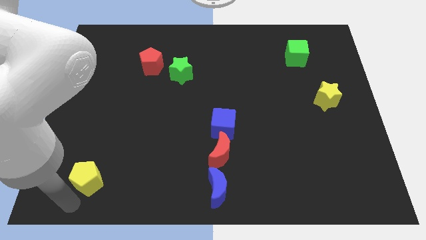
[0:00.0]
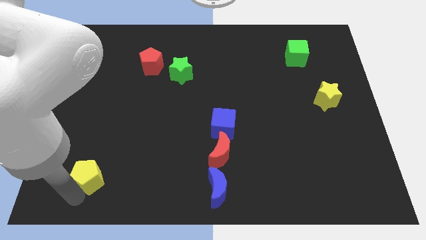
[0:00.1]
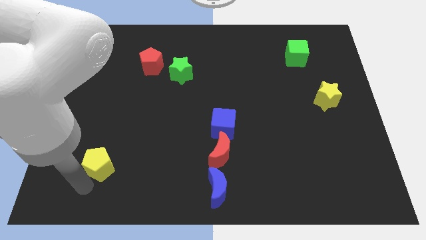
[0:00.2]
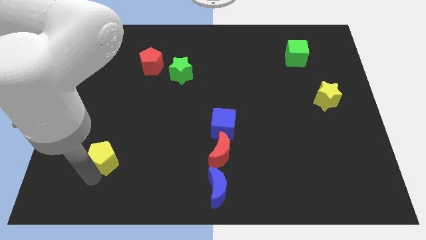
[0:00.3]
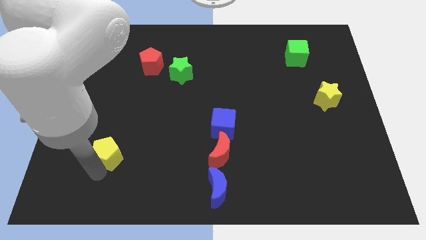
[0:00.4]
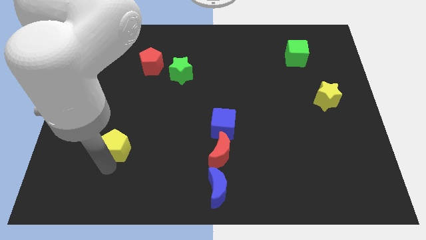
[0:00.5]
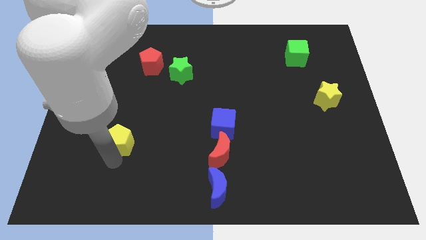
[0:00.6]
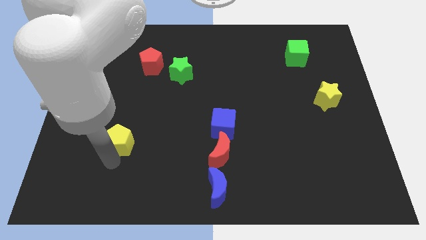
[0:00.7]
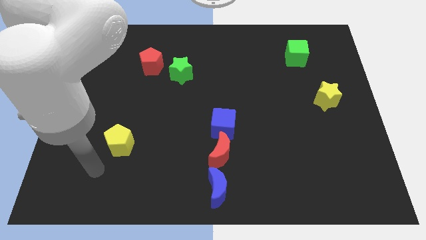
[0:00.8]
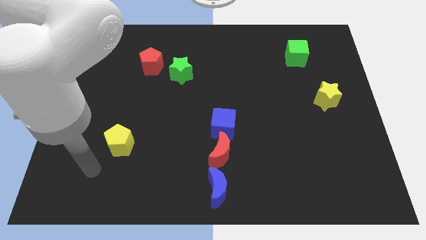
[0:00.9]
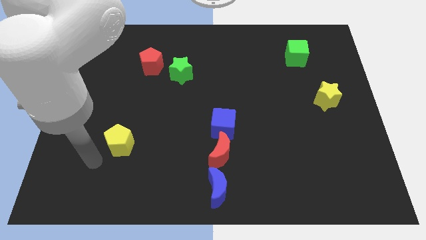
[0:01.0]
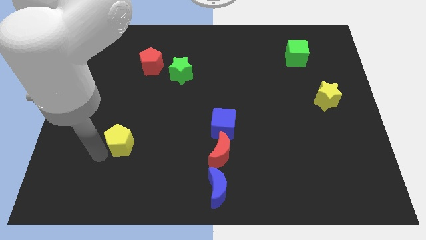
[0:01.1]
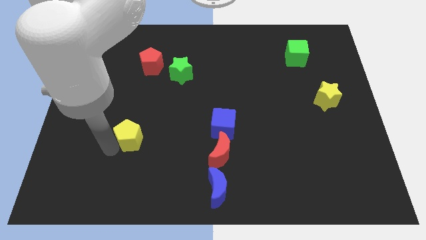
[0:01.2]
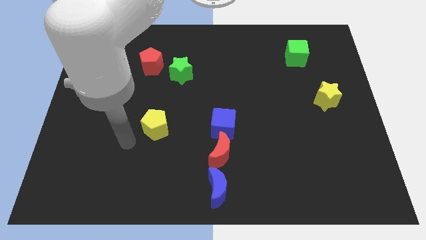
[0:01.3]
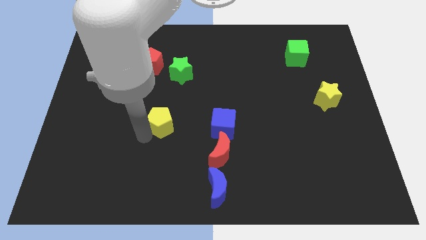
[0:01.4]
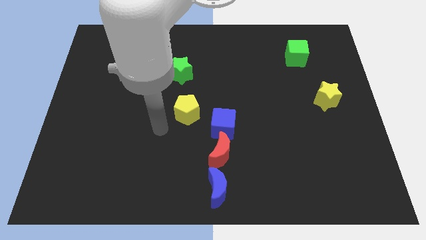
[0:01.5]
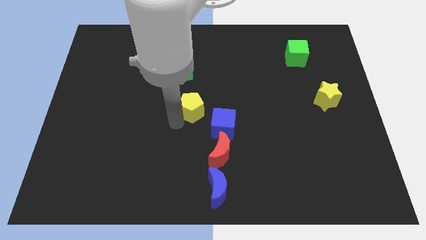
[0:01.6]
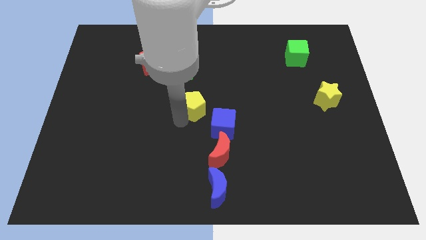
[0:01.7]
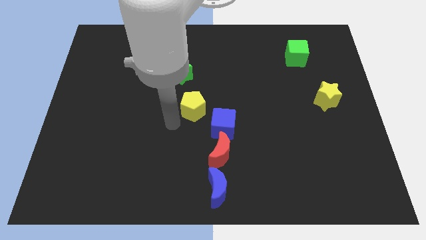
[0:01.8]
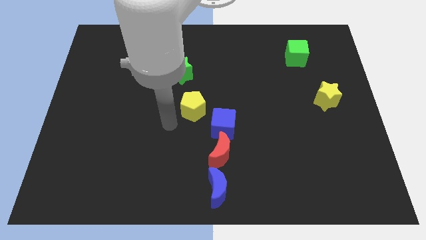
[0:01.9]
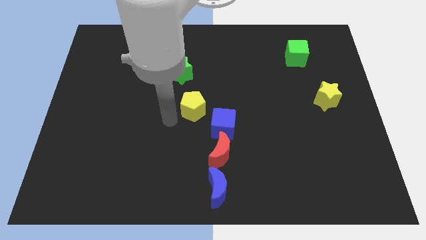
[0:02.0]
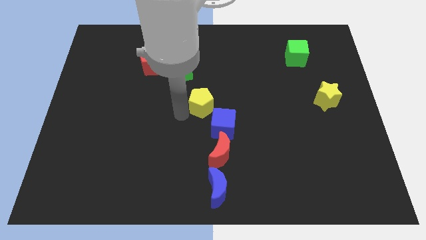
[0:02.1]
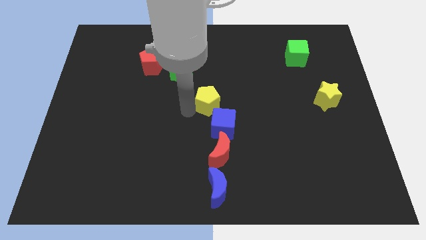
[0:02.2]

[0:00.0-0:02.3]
put the yellow pentagon at the center of the board

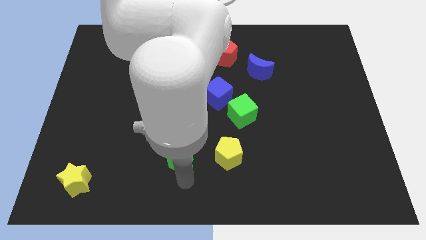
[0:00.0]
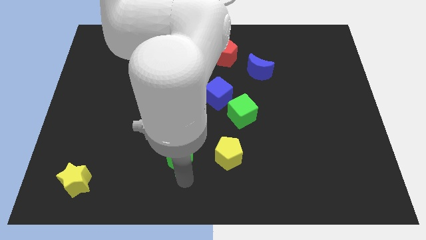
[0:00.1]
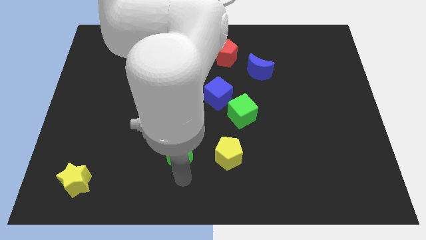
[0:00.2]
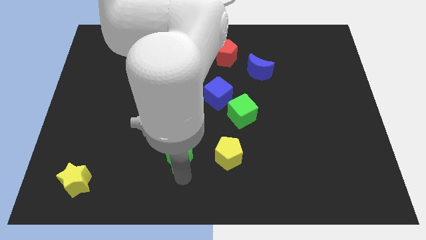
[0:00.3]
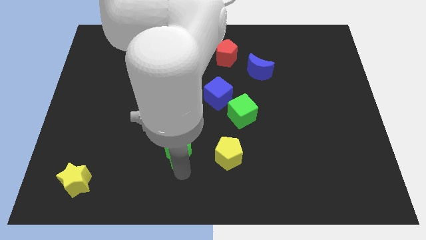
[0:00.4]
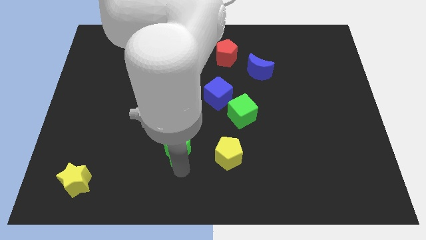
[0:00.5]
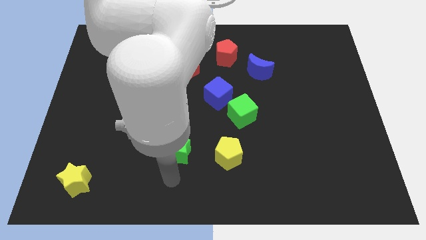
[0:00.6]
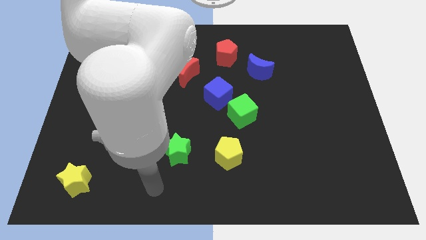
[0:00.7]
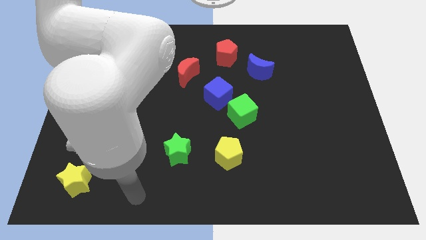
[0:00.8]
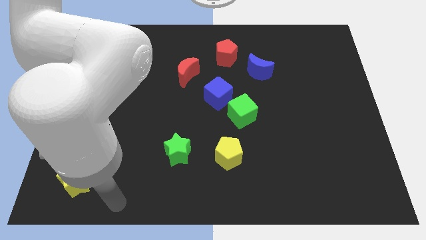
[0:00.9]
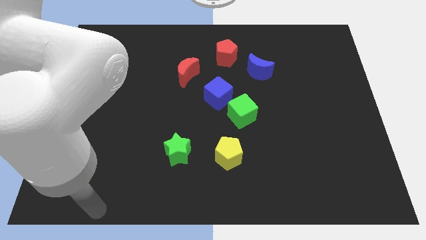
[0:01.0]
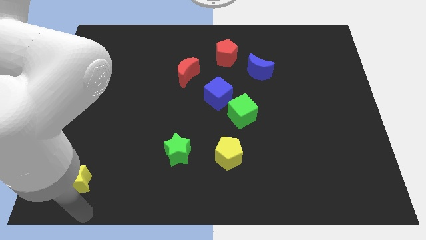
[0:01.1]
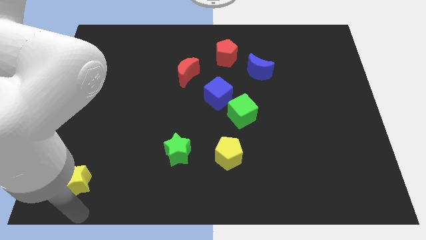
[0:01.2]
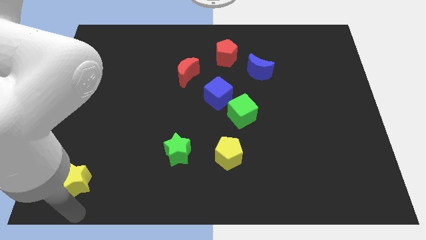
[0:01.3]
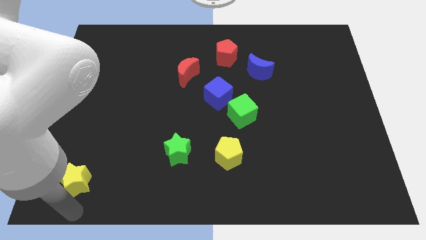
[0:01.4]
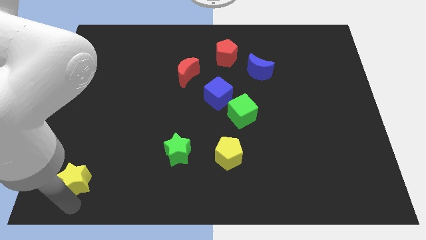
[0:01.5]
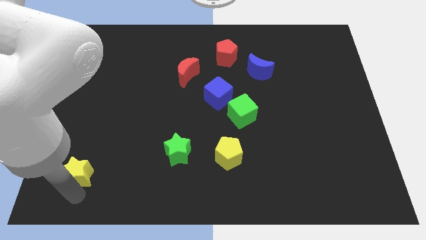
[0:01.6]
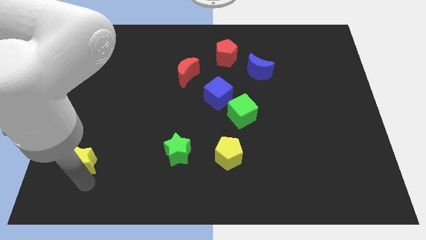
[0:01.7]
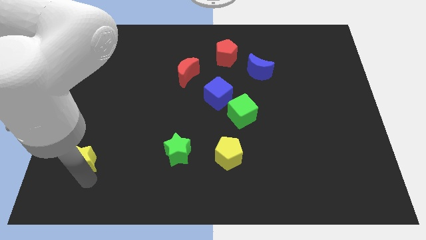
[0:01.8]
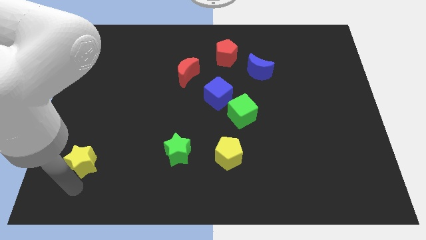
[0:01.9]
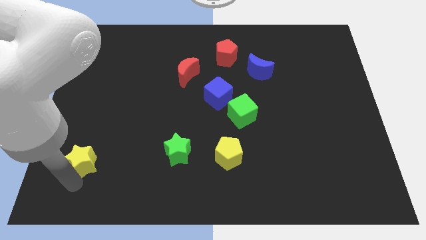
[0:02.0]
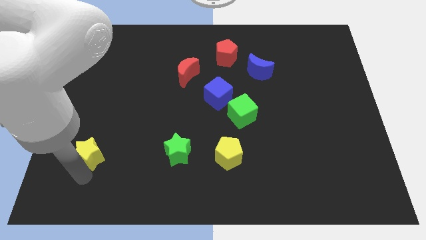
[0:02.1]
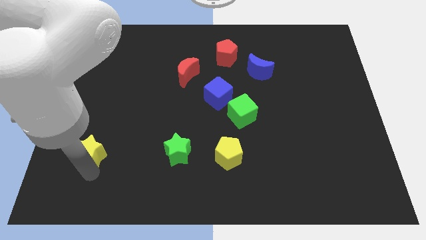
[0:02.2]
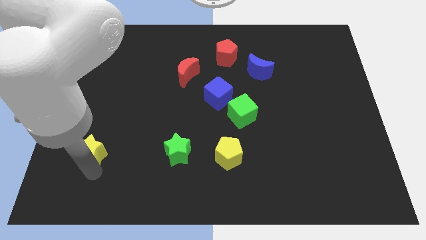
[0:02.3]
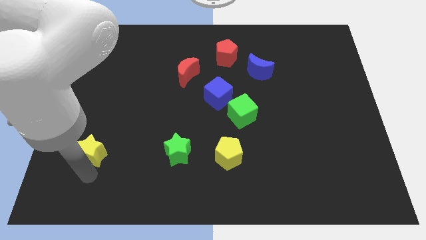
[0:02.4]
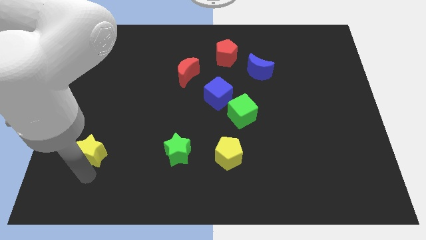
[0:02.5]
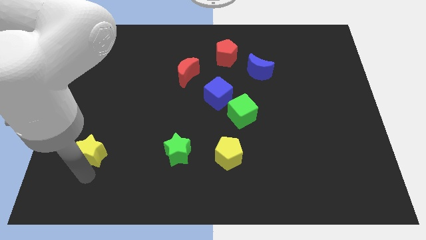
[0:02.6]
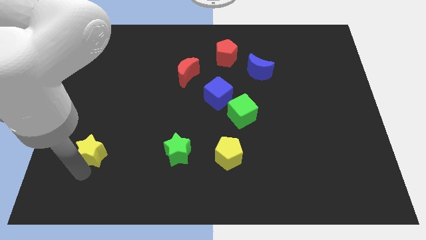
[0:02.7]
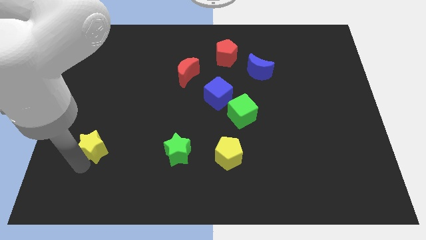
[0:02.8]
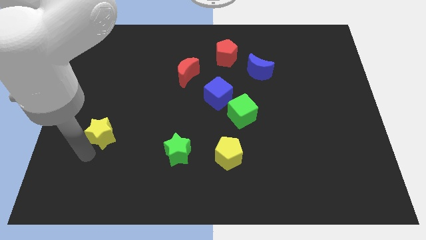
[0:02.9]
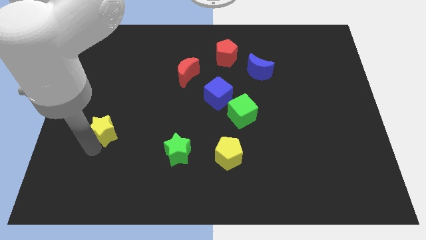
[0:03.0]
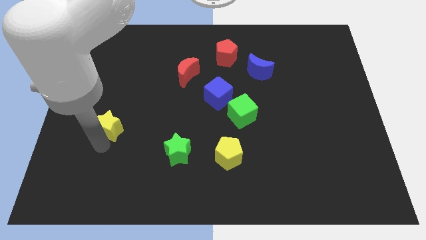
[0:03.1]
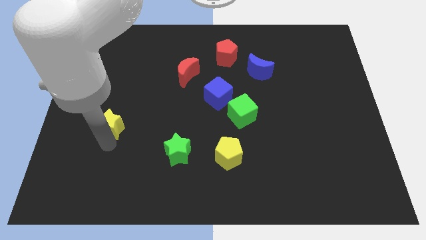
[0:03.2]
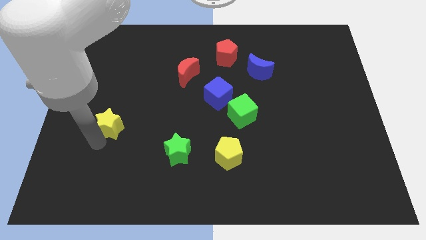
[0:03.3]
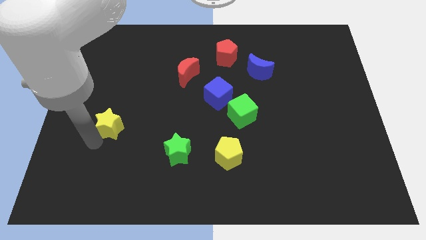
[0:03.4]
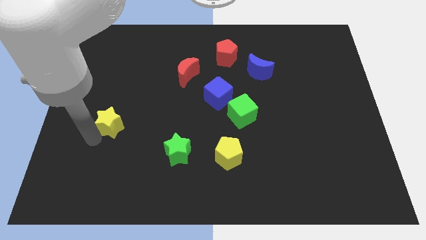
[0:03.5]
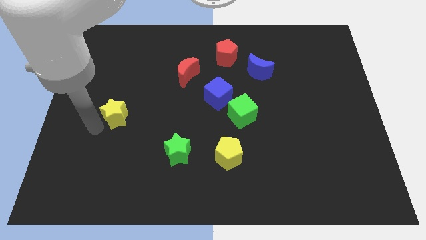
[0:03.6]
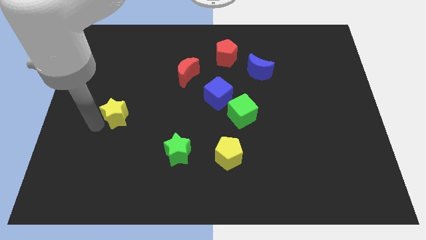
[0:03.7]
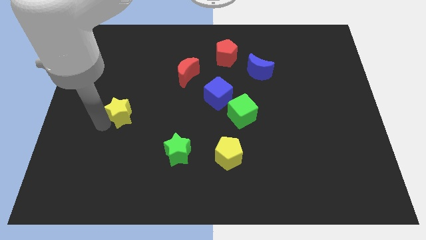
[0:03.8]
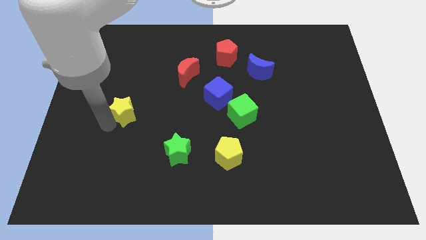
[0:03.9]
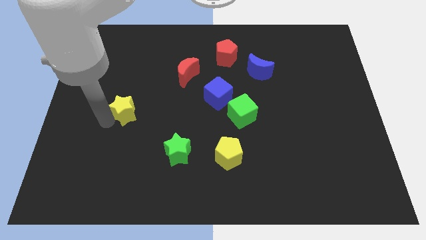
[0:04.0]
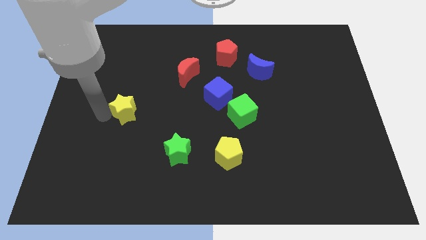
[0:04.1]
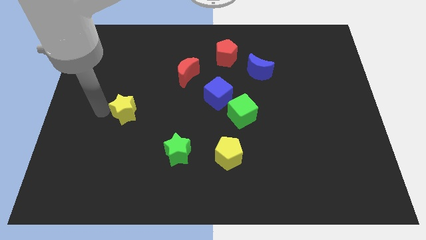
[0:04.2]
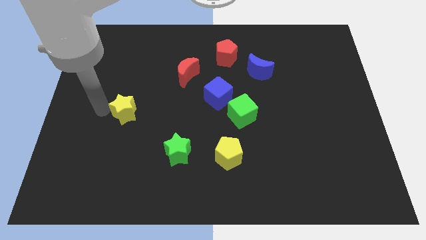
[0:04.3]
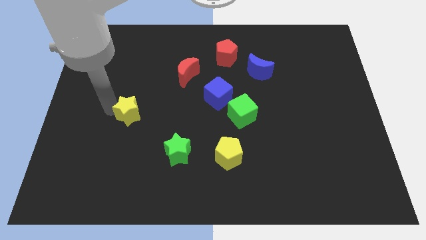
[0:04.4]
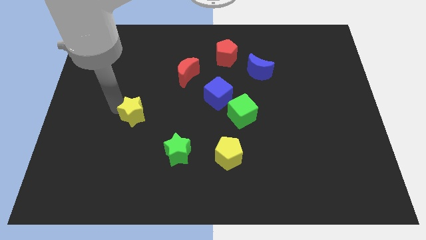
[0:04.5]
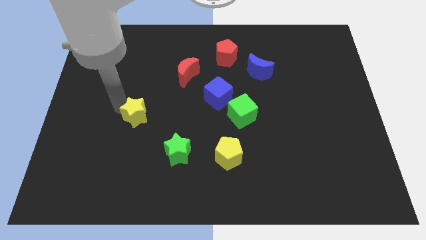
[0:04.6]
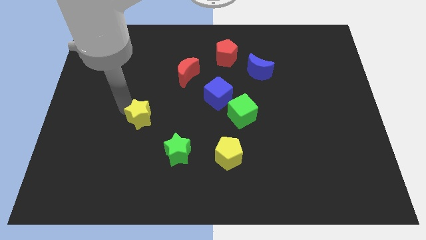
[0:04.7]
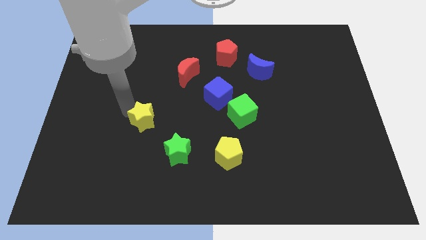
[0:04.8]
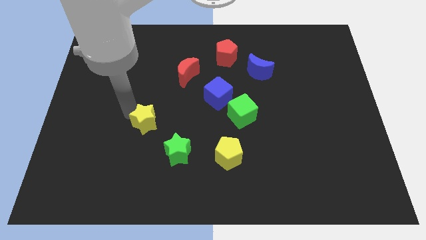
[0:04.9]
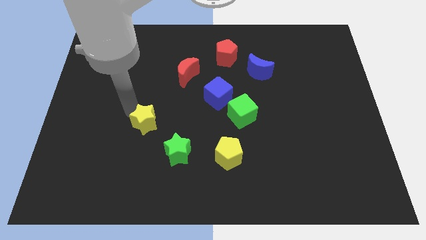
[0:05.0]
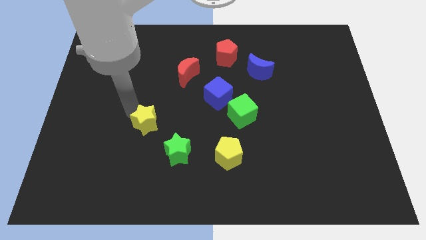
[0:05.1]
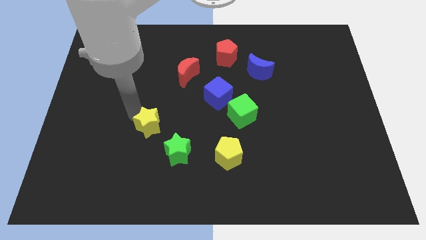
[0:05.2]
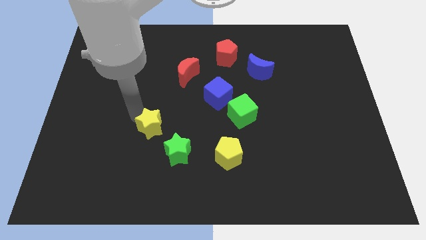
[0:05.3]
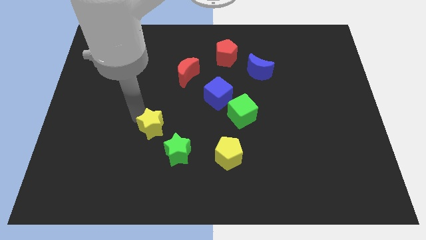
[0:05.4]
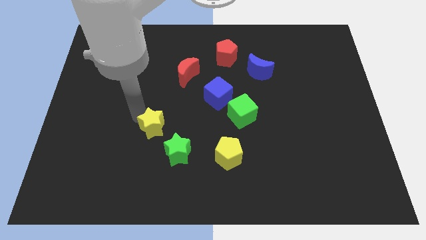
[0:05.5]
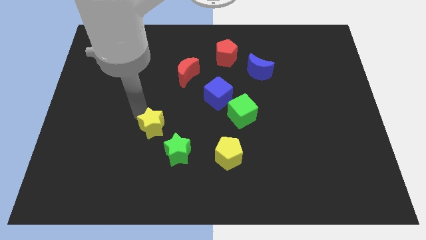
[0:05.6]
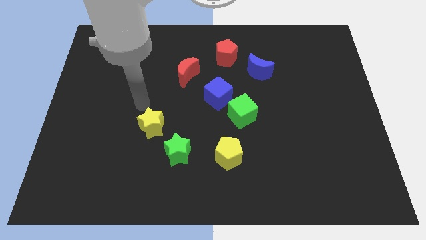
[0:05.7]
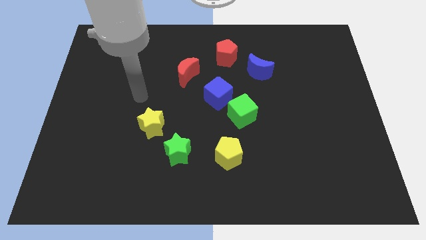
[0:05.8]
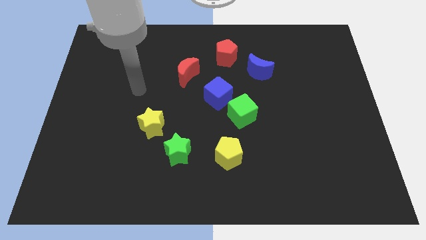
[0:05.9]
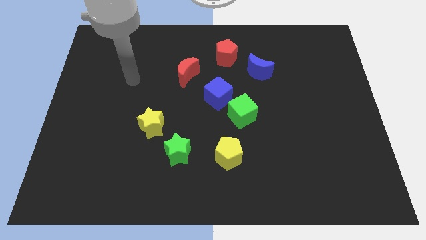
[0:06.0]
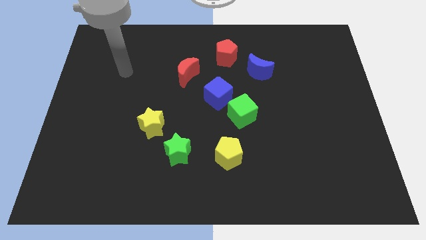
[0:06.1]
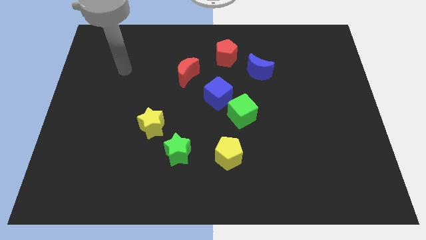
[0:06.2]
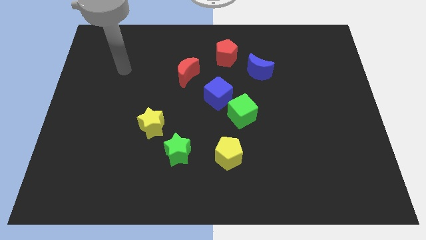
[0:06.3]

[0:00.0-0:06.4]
move the yellow star towards the top of the green star

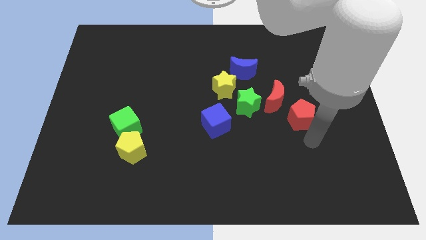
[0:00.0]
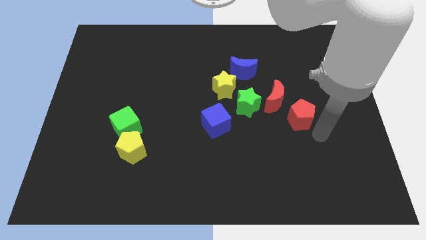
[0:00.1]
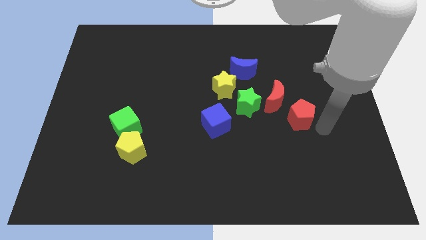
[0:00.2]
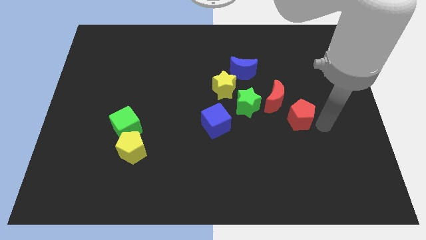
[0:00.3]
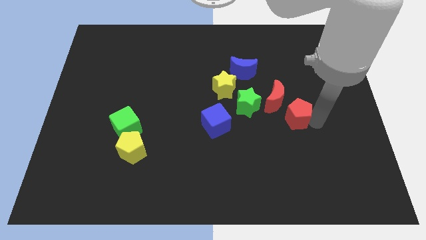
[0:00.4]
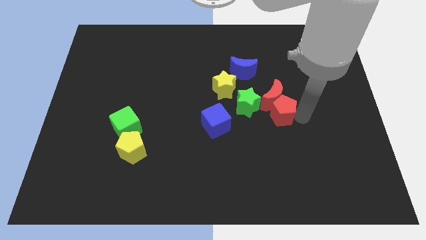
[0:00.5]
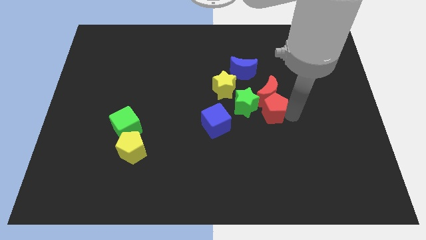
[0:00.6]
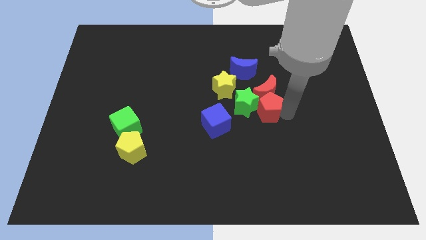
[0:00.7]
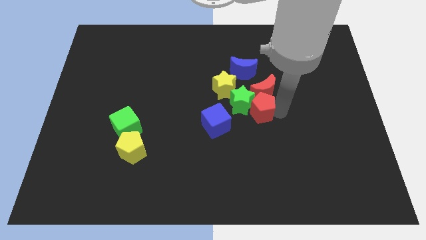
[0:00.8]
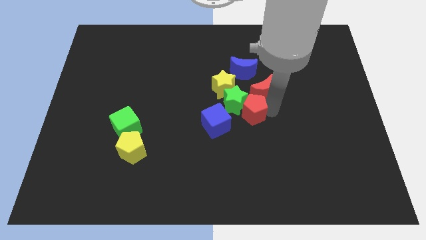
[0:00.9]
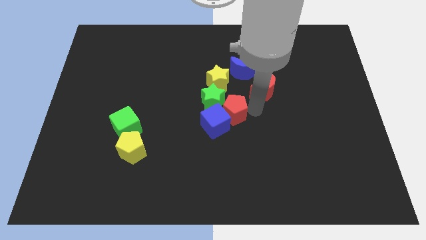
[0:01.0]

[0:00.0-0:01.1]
push the red pentagon into the green star
